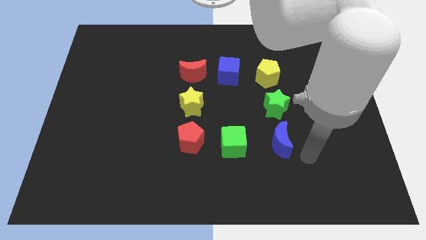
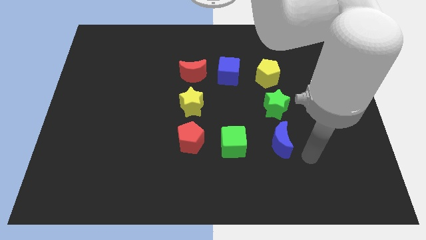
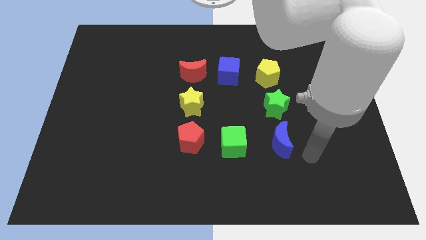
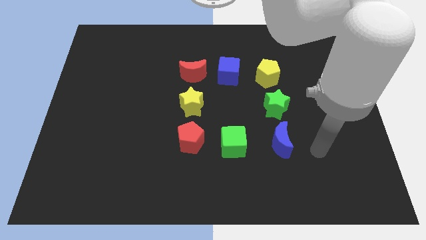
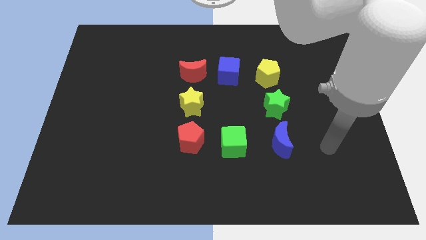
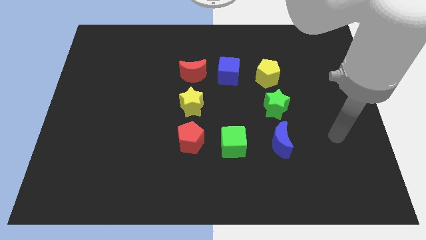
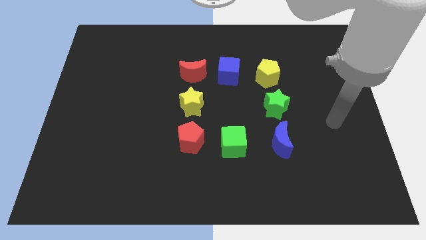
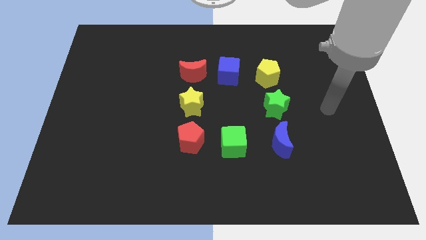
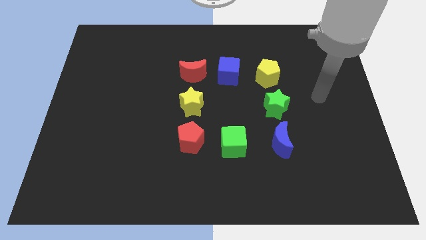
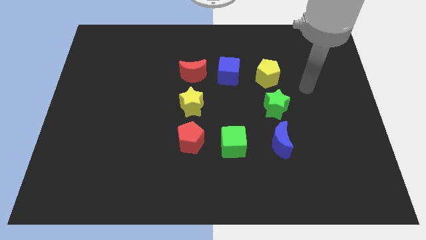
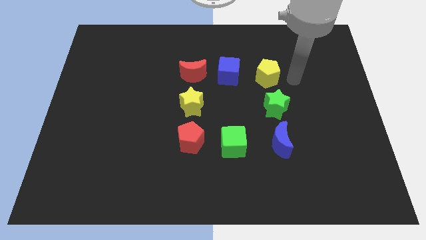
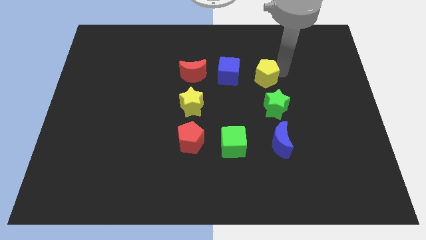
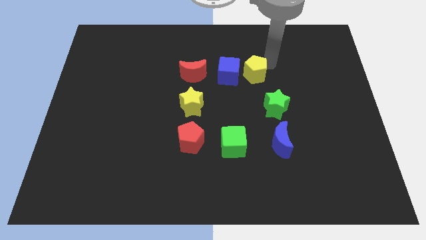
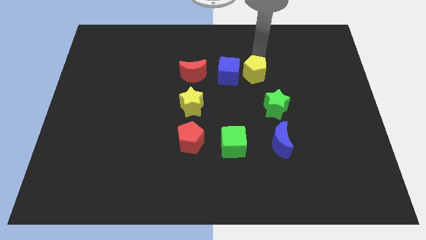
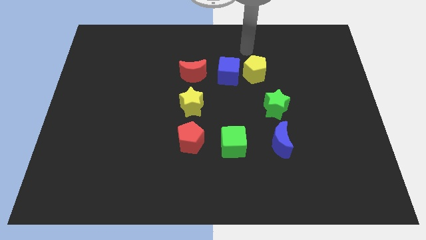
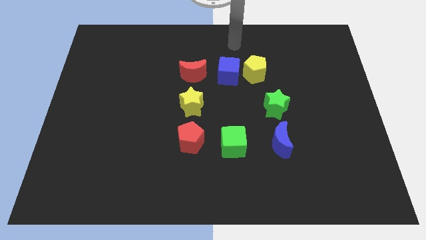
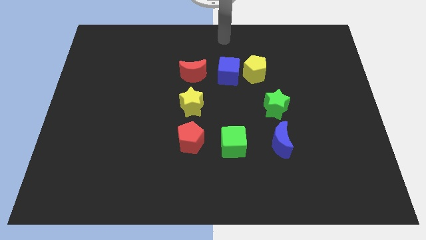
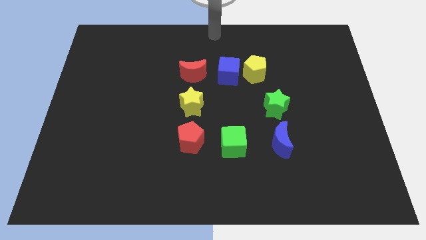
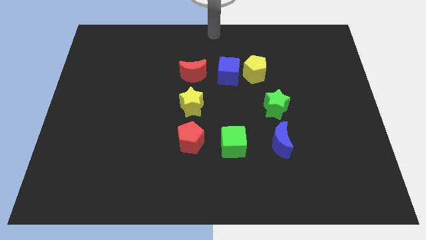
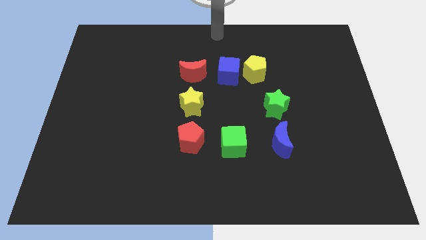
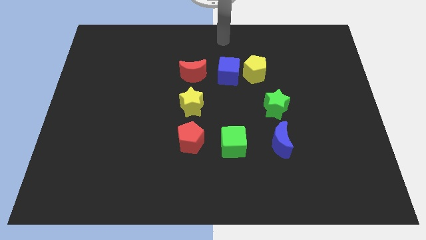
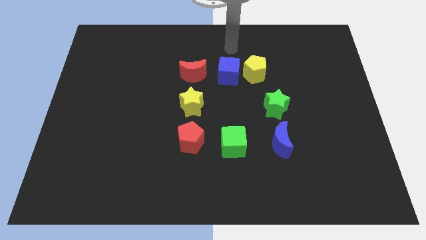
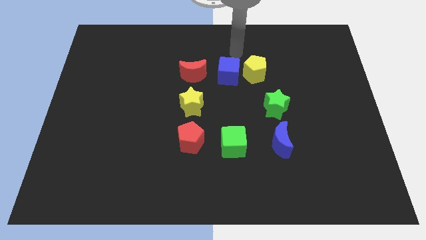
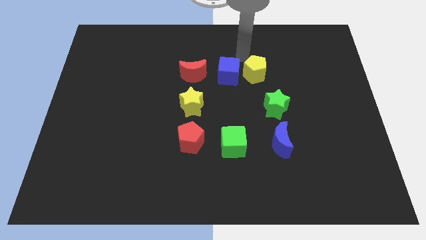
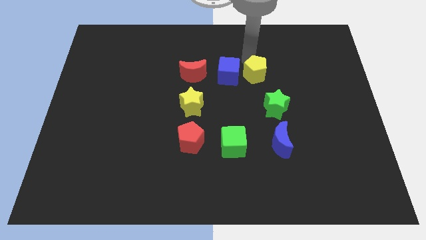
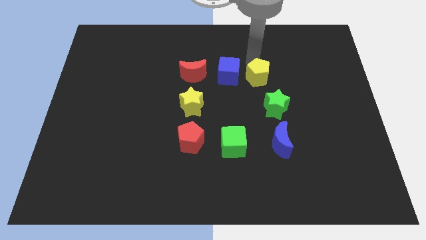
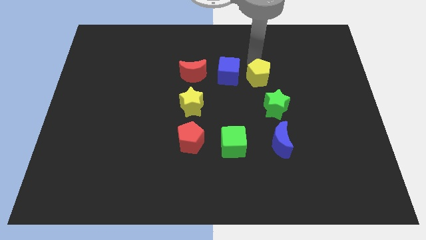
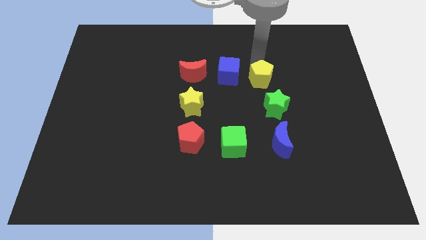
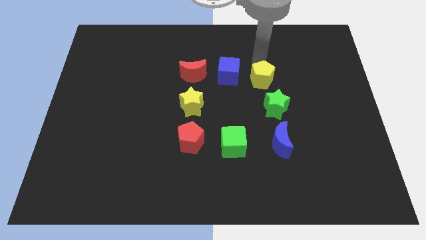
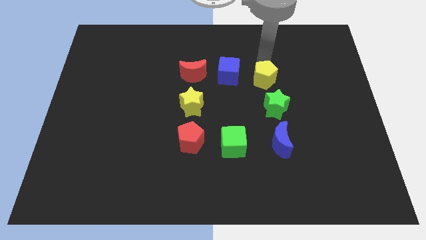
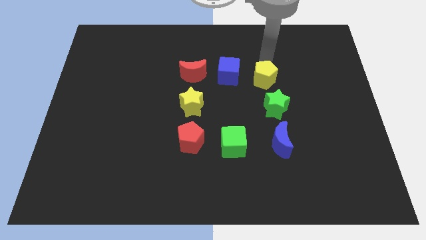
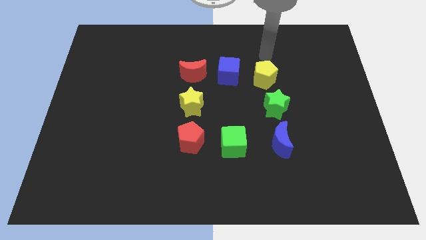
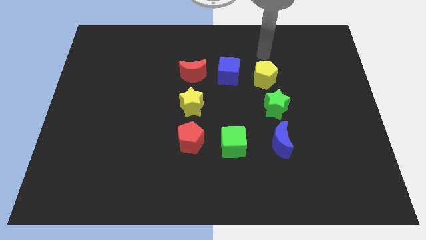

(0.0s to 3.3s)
adjust the yellow pentagon at the top side of the green star

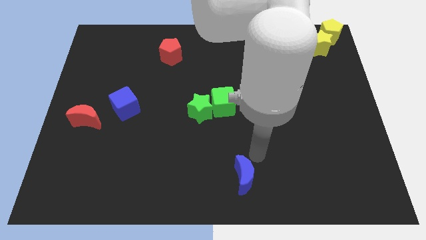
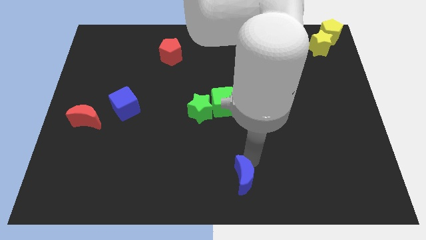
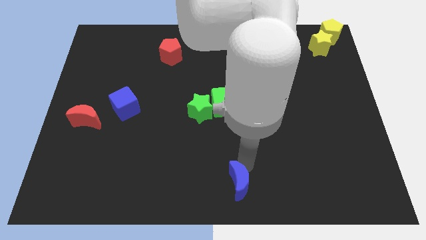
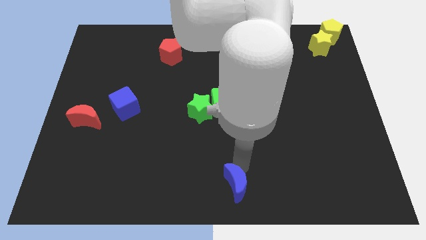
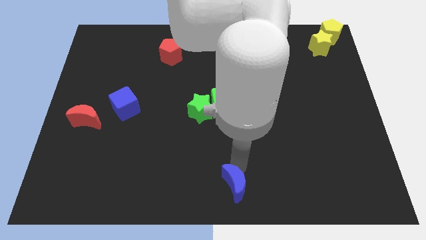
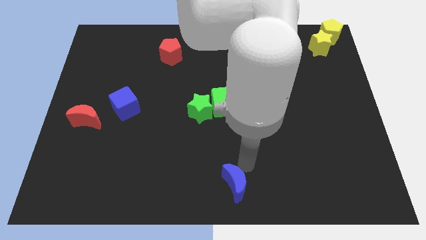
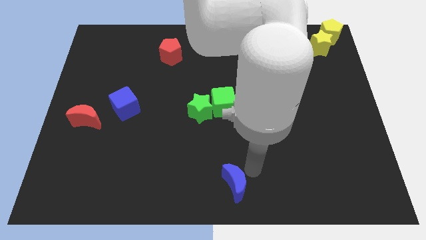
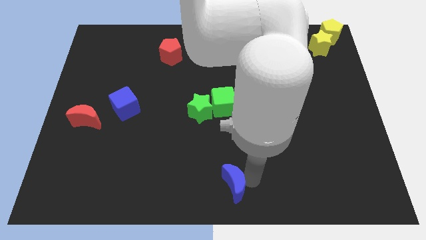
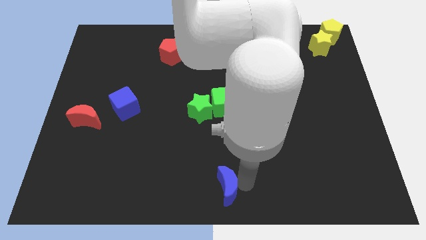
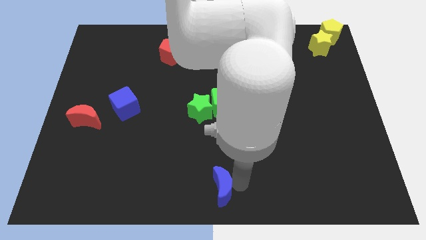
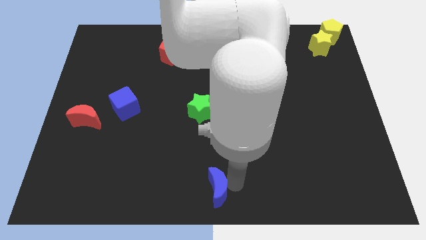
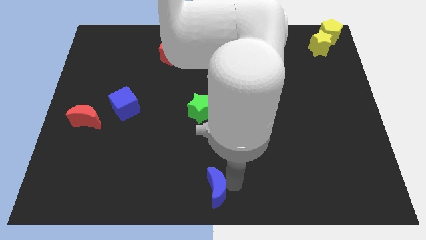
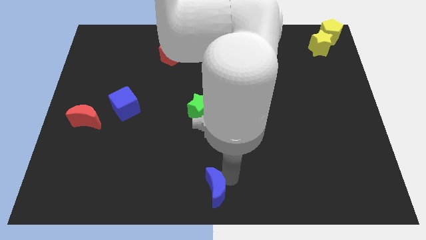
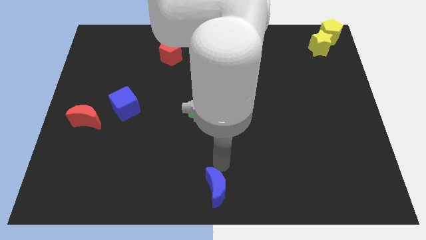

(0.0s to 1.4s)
move the blue crescent to the bottom center of the board

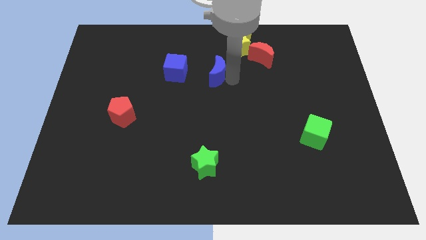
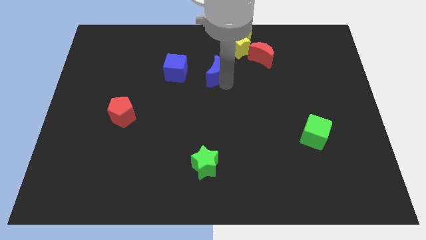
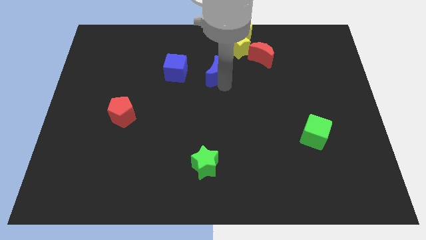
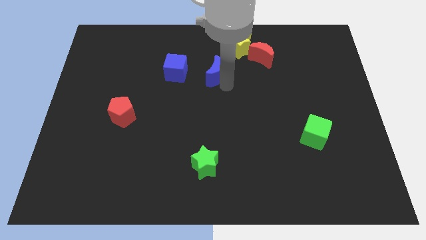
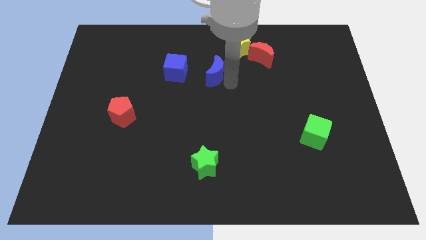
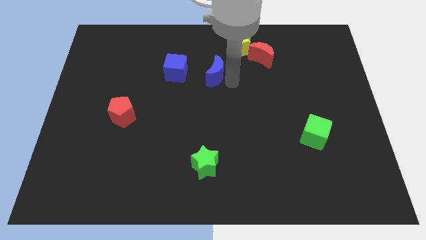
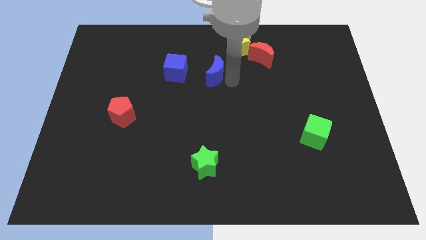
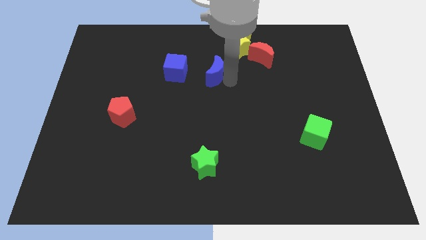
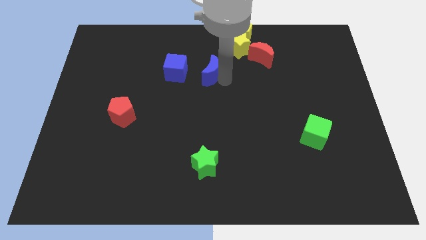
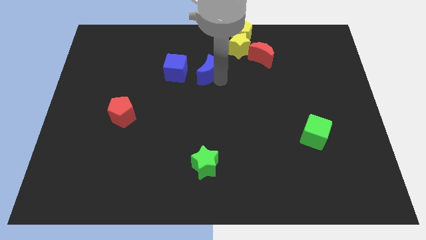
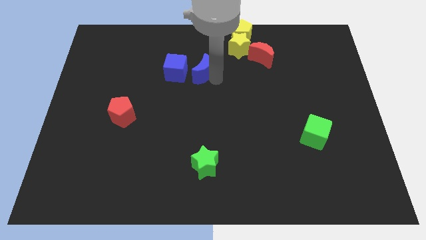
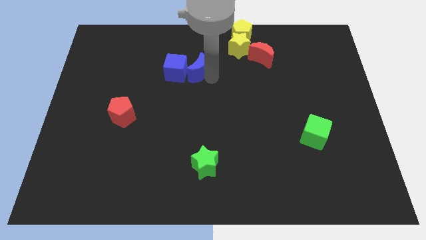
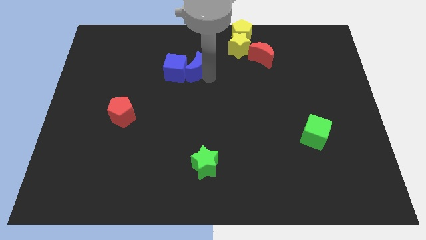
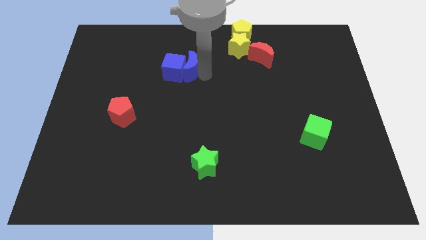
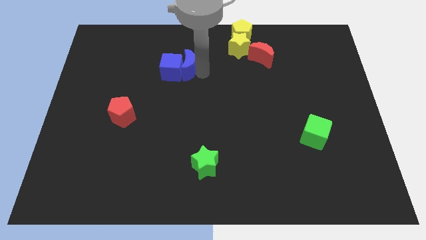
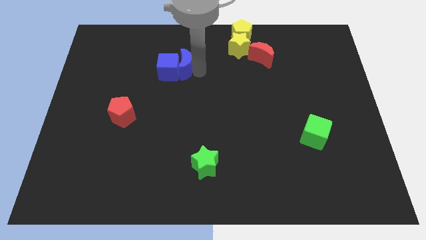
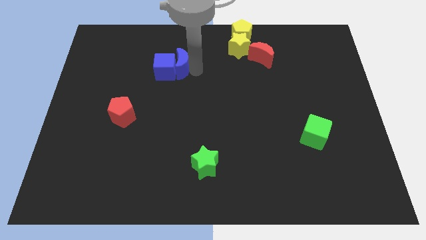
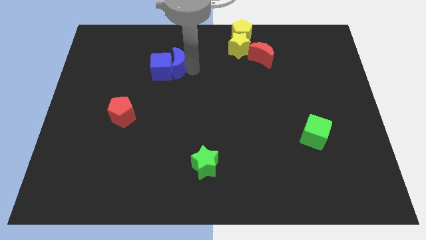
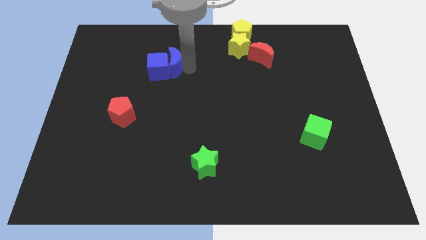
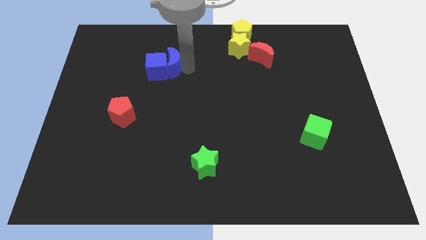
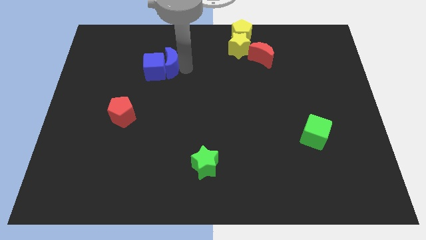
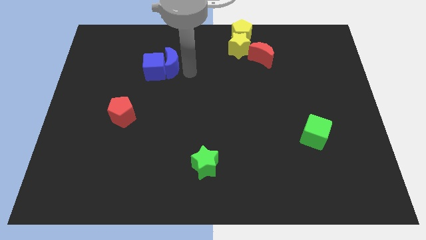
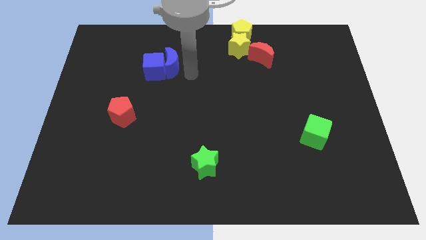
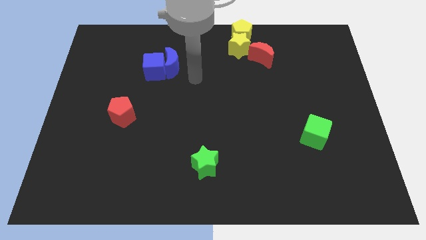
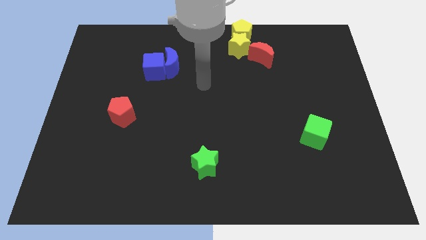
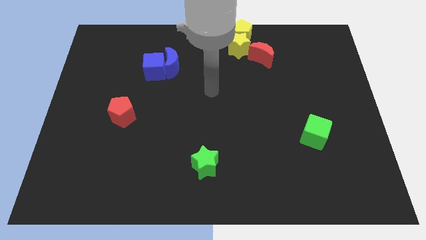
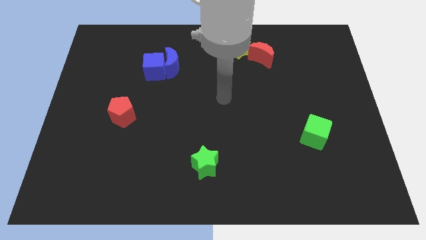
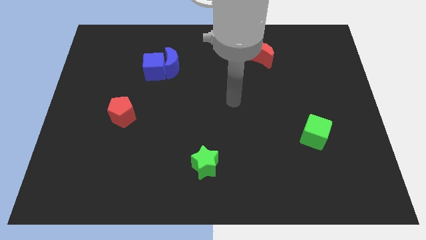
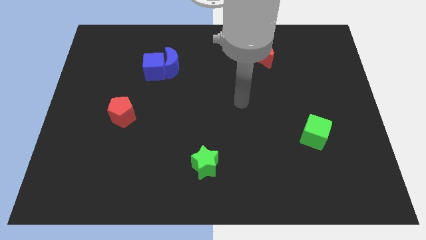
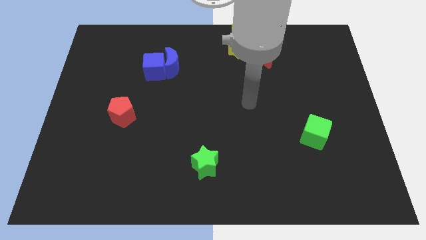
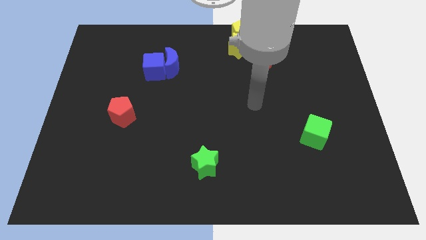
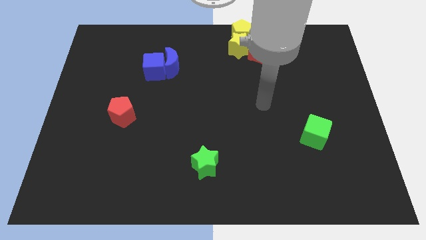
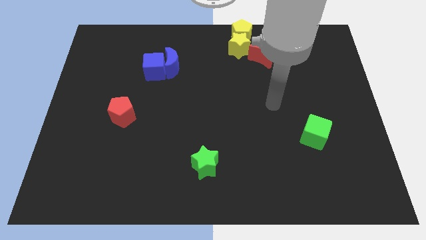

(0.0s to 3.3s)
group up the blue blocks

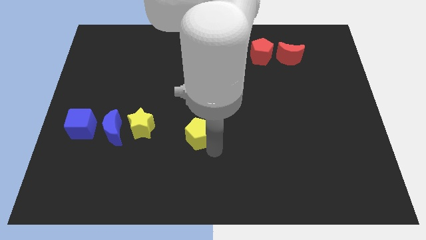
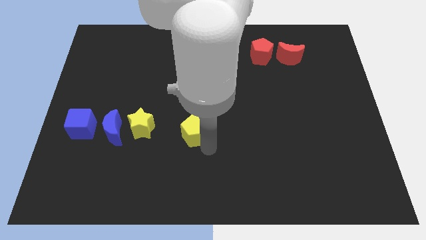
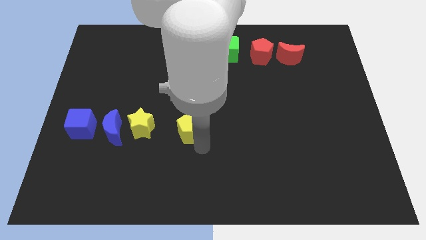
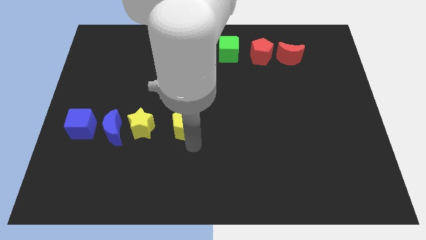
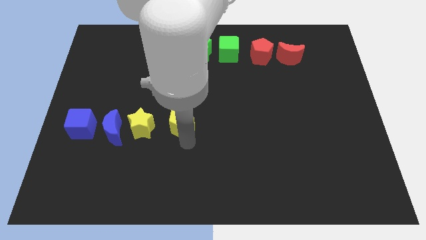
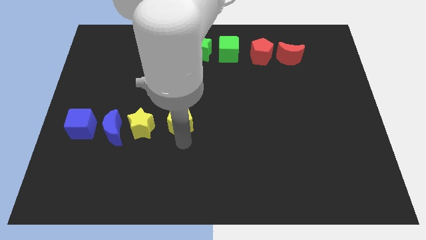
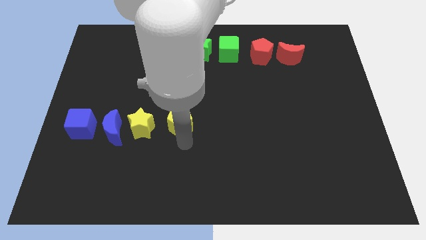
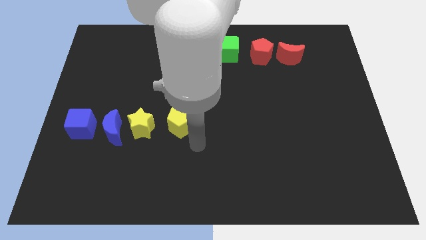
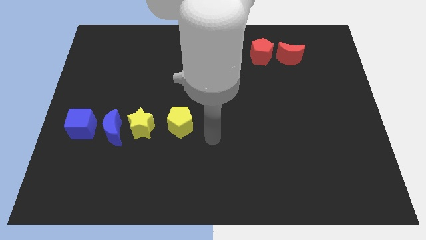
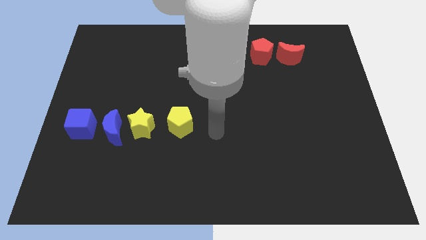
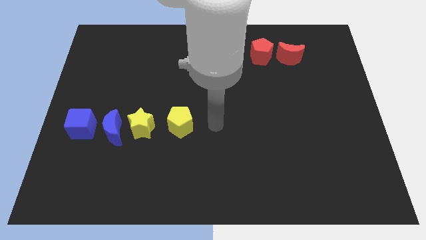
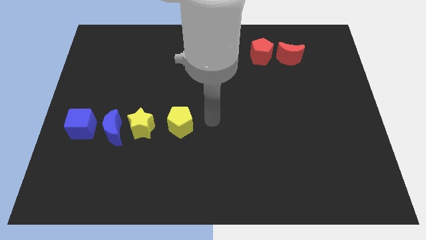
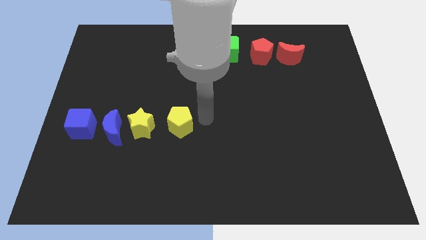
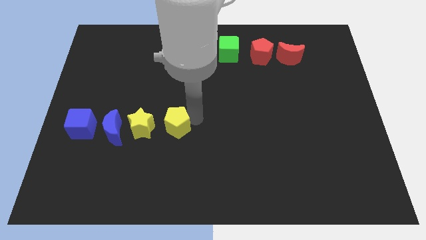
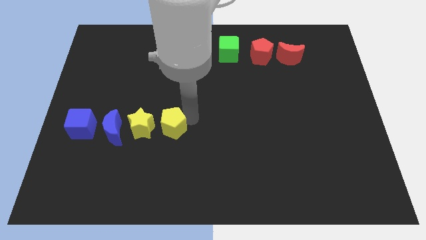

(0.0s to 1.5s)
place the yellow pentagon to the right side of the yellow star
